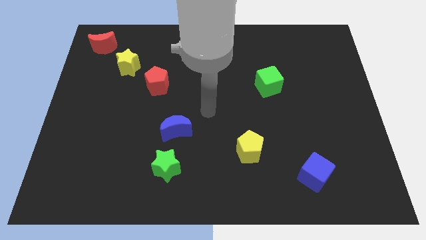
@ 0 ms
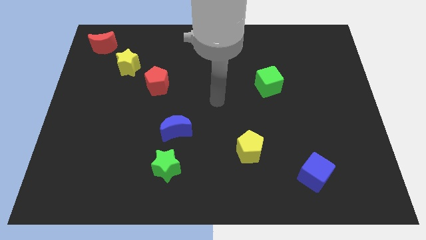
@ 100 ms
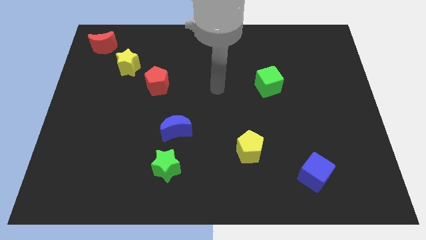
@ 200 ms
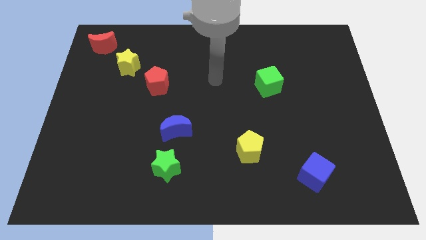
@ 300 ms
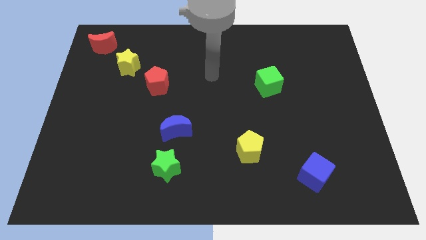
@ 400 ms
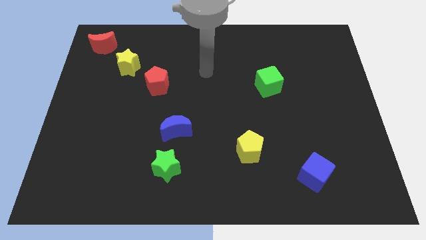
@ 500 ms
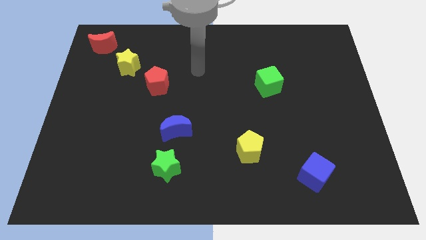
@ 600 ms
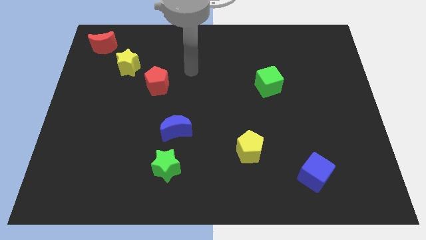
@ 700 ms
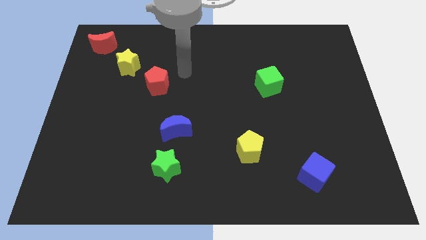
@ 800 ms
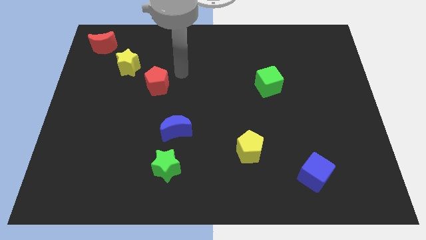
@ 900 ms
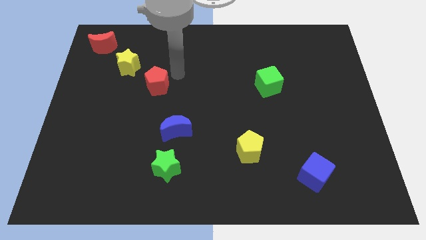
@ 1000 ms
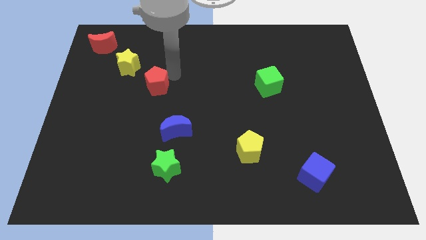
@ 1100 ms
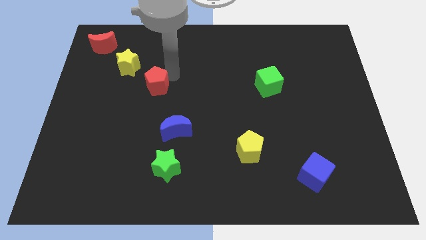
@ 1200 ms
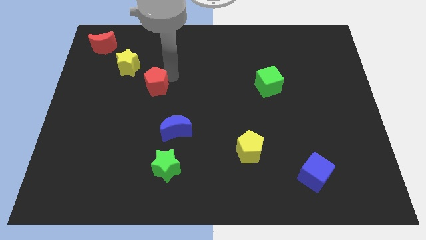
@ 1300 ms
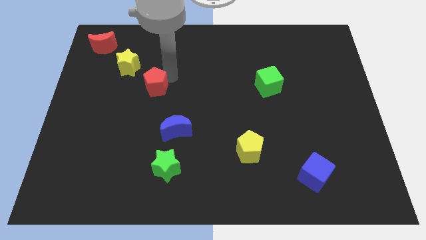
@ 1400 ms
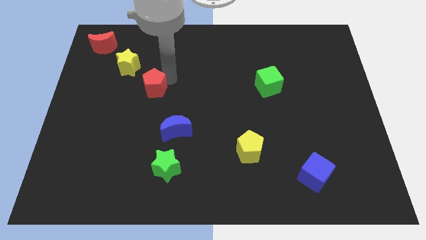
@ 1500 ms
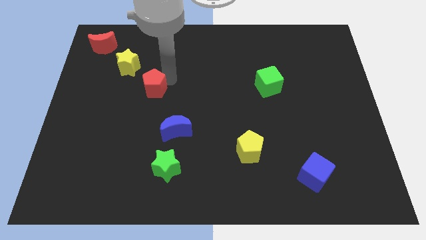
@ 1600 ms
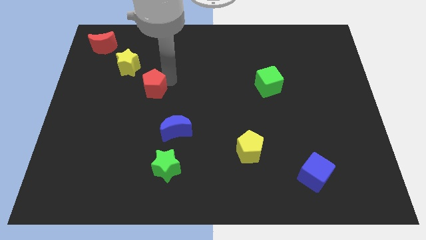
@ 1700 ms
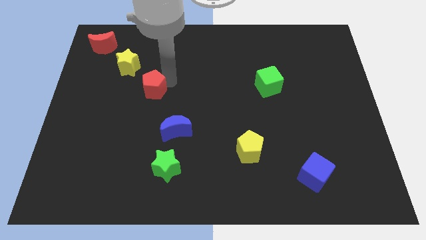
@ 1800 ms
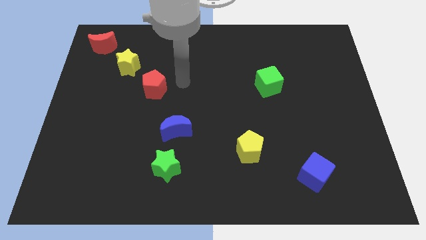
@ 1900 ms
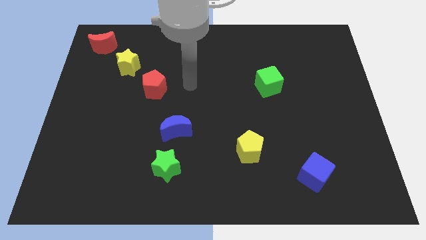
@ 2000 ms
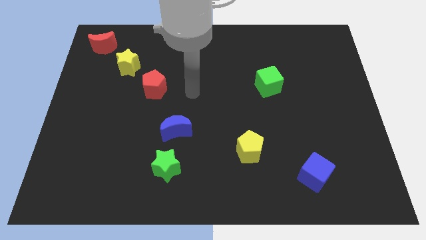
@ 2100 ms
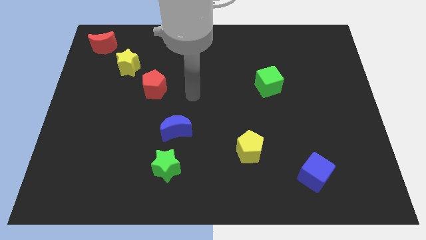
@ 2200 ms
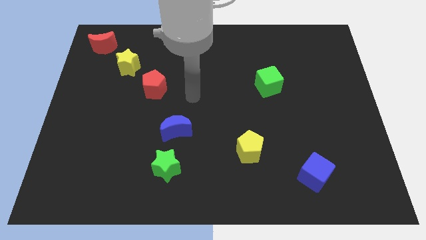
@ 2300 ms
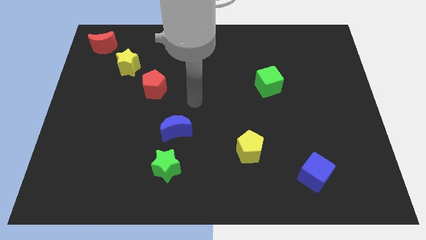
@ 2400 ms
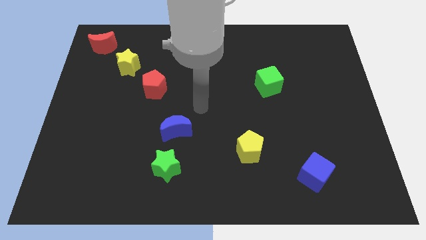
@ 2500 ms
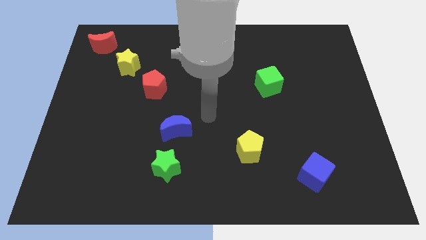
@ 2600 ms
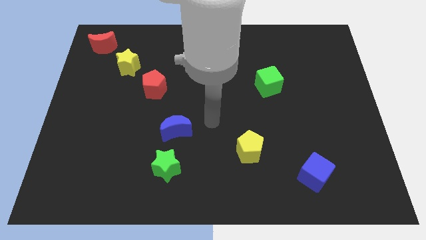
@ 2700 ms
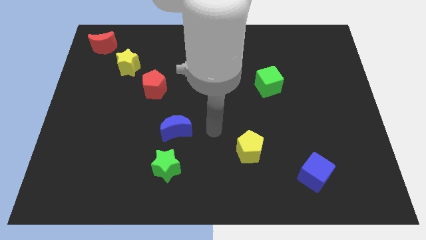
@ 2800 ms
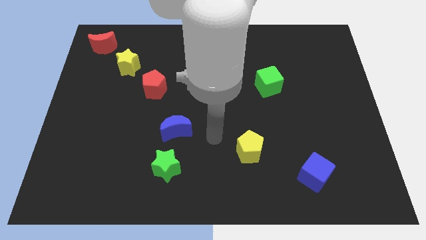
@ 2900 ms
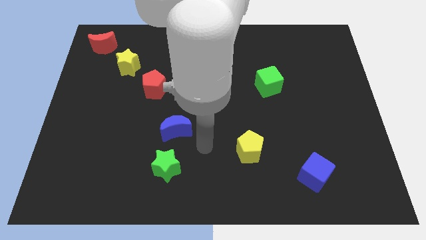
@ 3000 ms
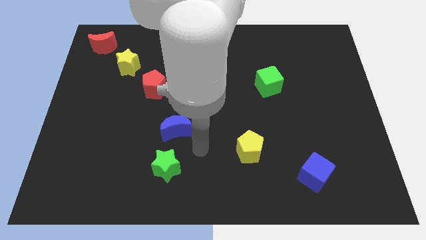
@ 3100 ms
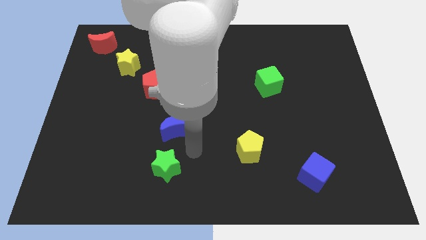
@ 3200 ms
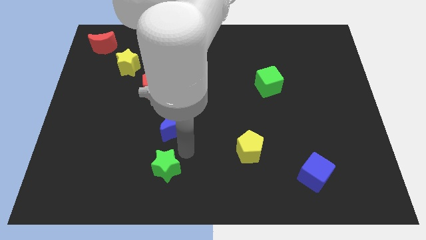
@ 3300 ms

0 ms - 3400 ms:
slightly push the red pentagon to the left of the board

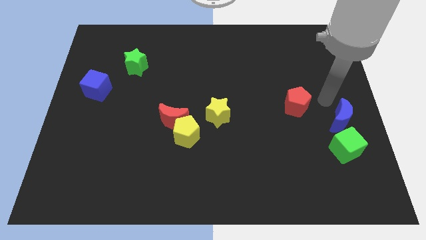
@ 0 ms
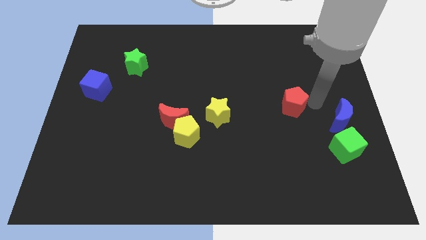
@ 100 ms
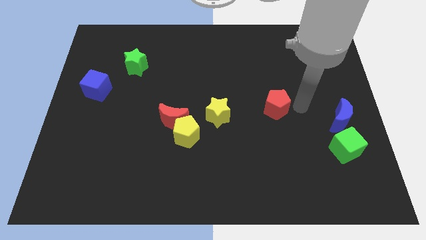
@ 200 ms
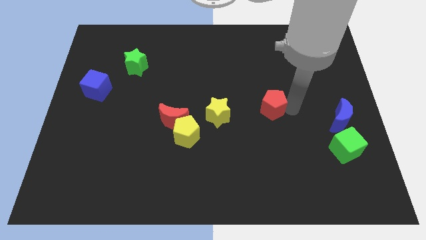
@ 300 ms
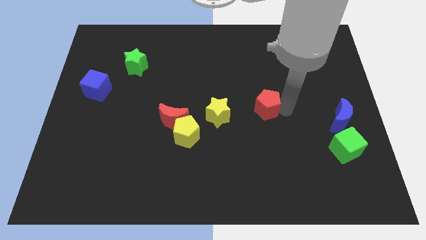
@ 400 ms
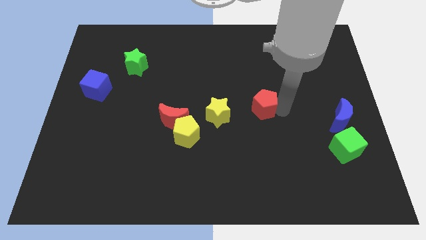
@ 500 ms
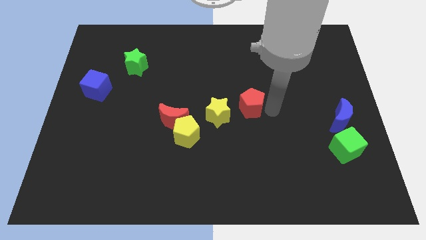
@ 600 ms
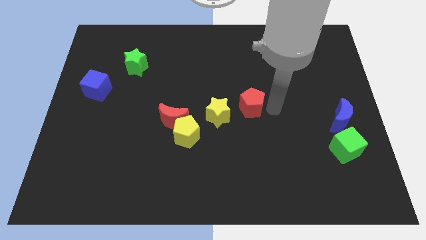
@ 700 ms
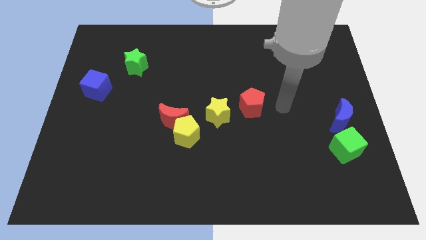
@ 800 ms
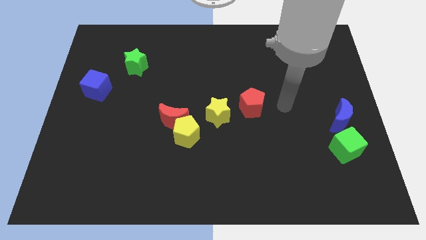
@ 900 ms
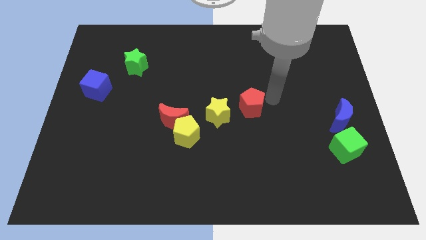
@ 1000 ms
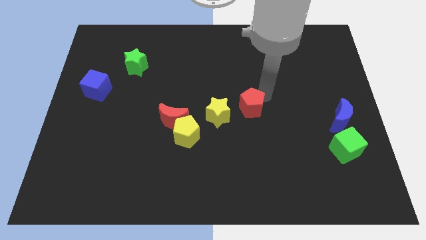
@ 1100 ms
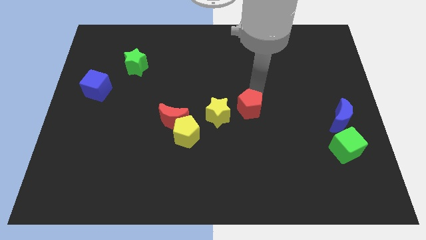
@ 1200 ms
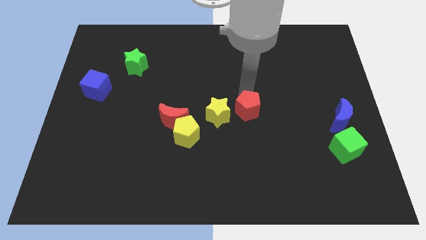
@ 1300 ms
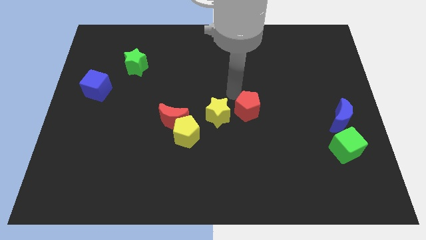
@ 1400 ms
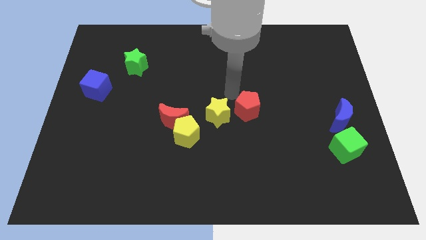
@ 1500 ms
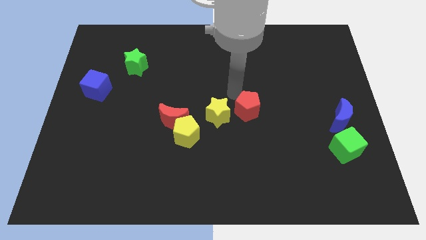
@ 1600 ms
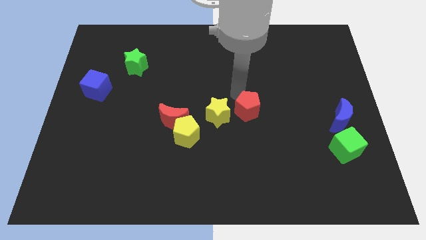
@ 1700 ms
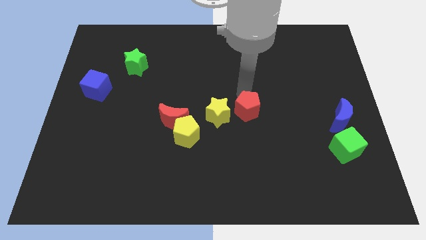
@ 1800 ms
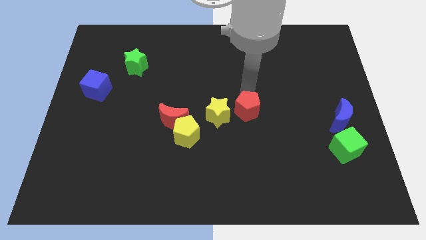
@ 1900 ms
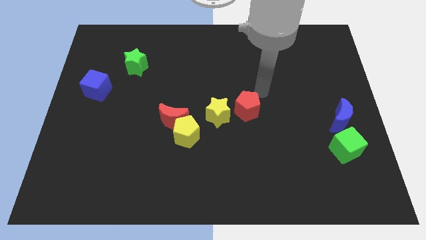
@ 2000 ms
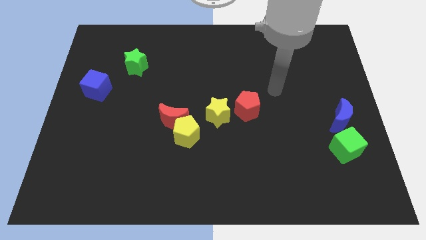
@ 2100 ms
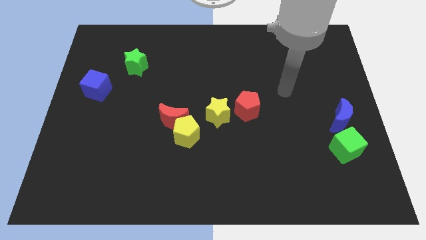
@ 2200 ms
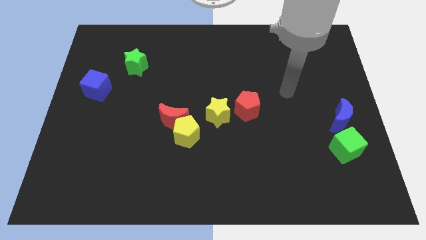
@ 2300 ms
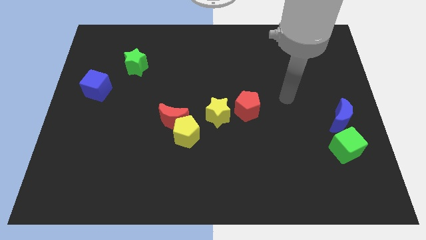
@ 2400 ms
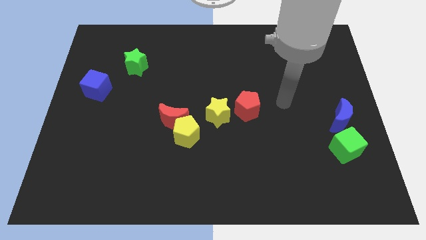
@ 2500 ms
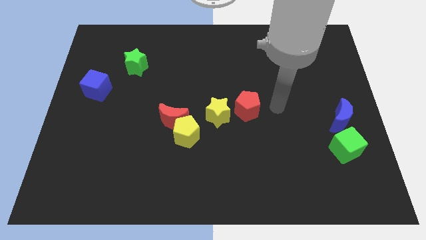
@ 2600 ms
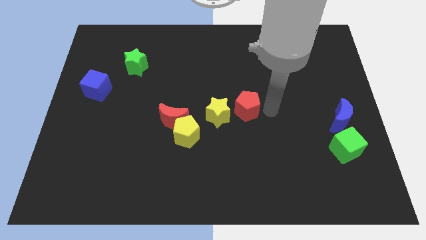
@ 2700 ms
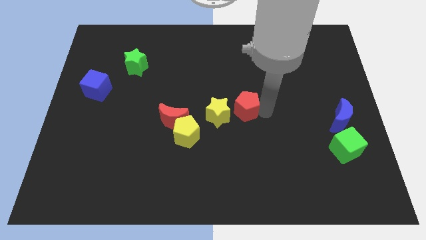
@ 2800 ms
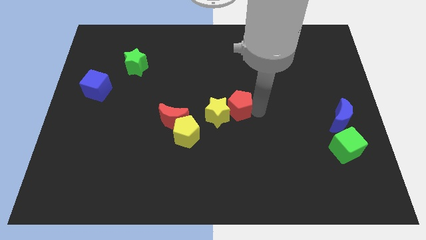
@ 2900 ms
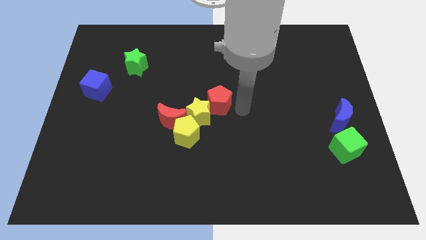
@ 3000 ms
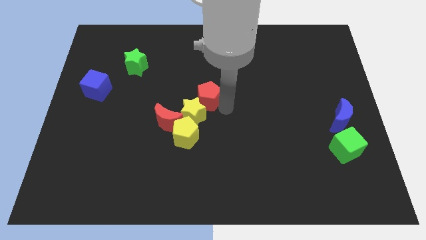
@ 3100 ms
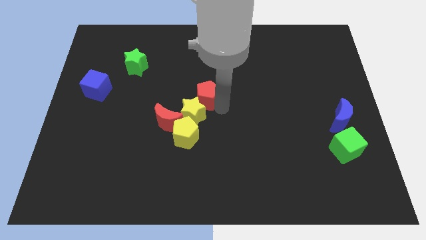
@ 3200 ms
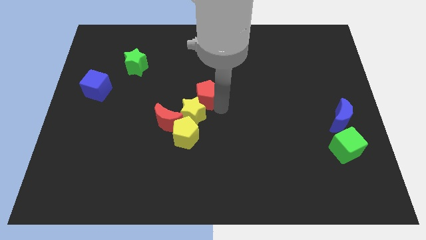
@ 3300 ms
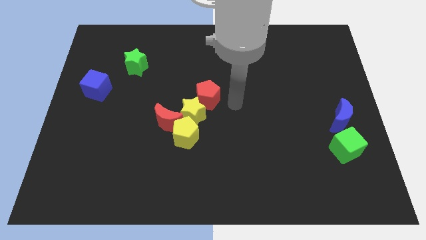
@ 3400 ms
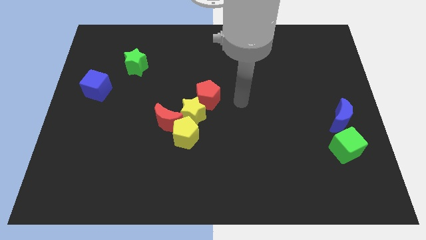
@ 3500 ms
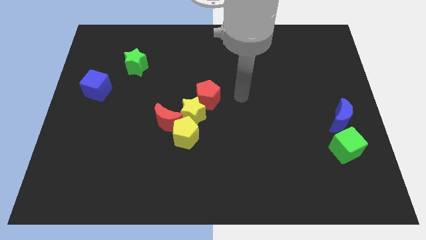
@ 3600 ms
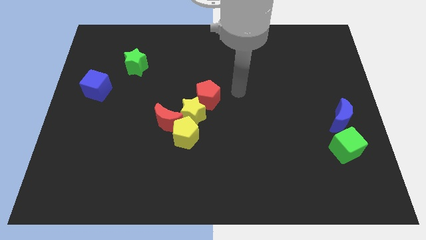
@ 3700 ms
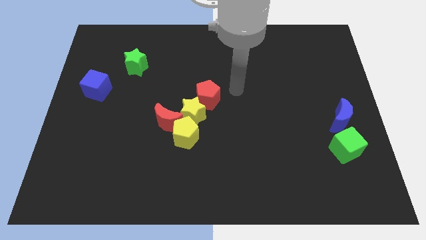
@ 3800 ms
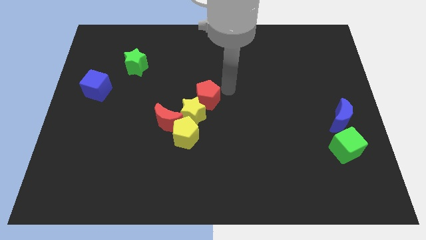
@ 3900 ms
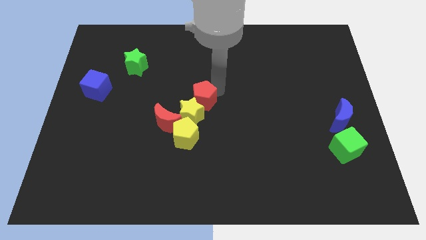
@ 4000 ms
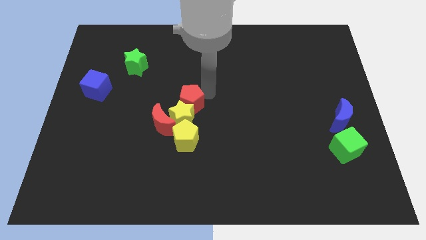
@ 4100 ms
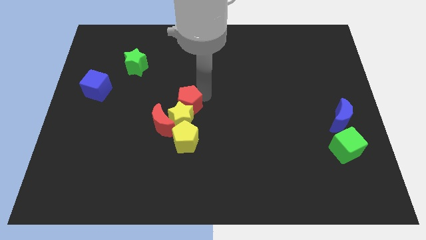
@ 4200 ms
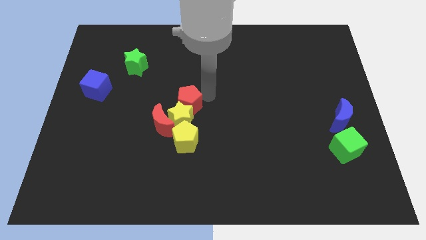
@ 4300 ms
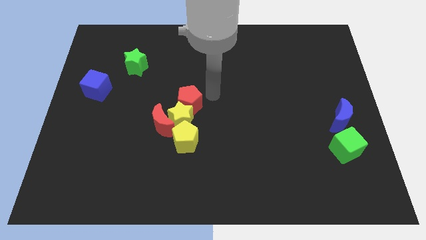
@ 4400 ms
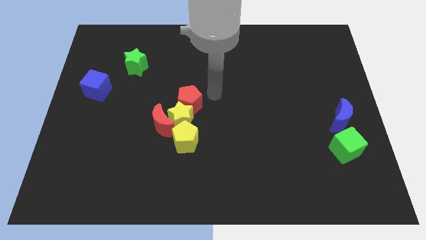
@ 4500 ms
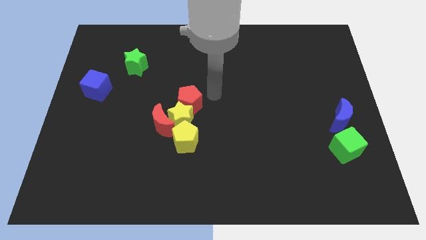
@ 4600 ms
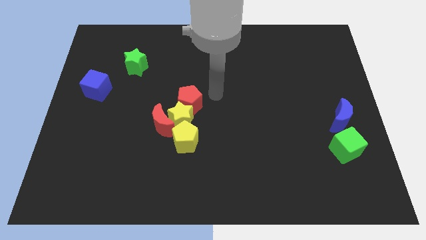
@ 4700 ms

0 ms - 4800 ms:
place the red pentagon above the yellow star

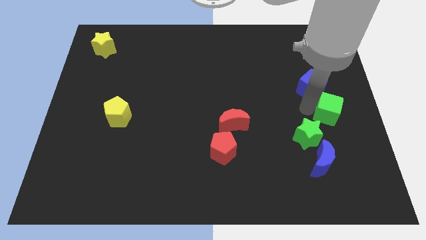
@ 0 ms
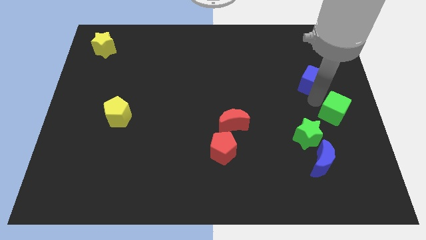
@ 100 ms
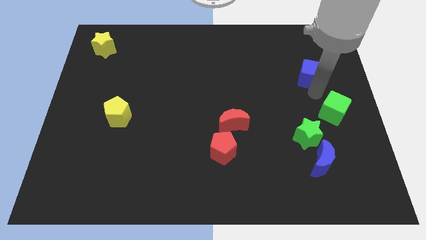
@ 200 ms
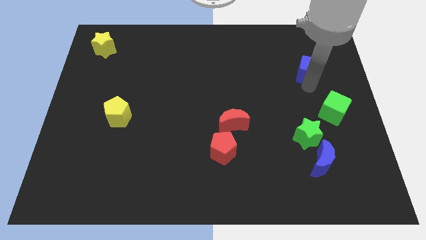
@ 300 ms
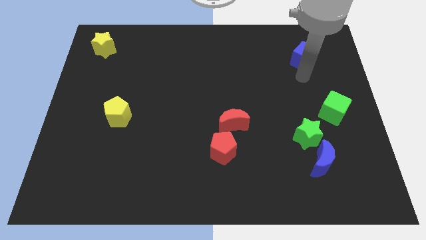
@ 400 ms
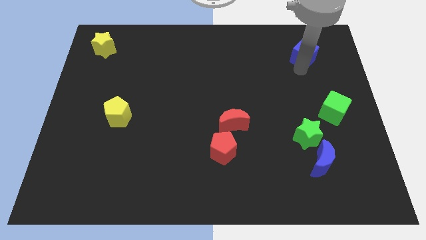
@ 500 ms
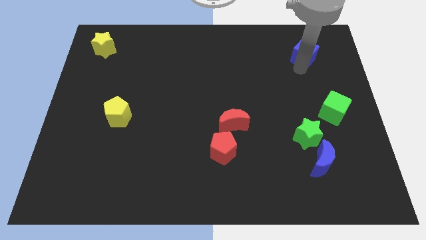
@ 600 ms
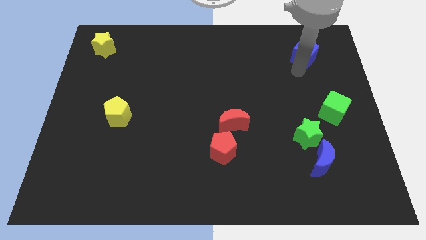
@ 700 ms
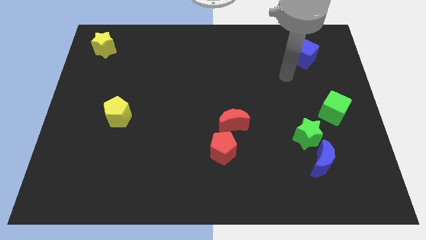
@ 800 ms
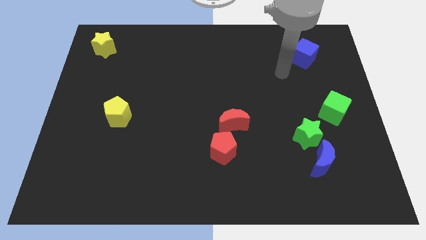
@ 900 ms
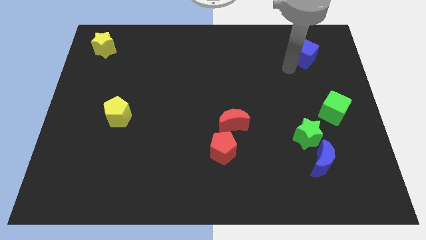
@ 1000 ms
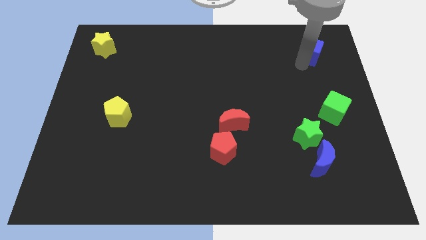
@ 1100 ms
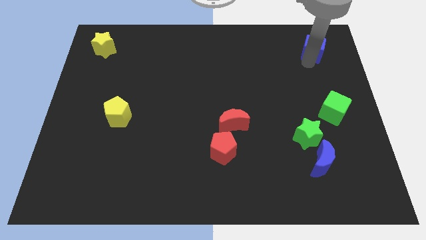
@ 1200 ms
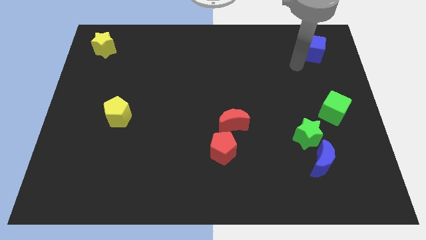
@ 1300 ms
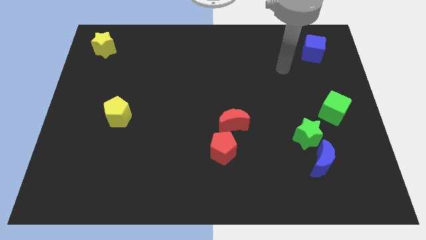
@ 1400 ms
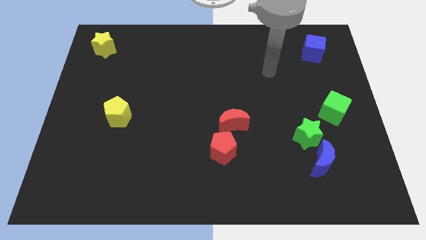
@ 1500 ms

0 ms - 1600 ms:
move the blue cube towards the top right of the board
